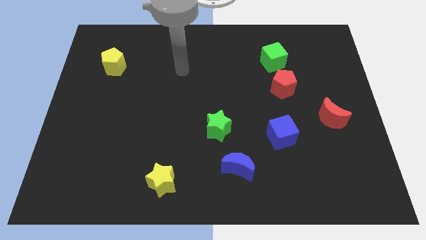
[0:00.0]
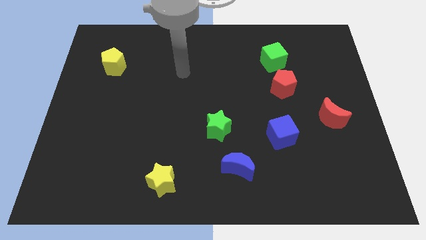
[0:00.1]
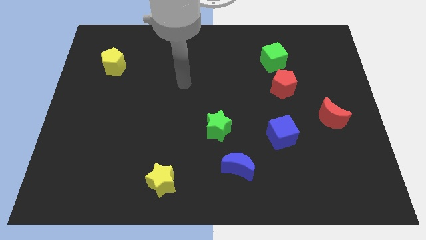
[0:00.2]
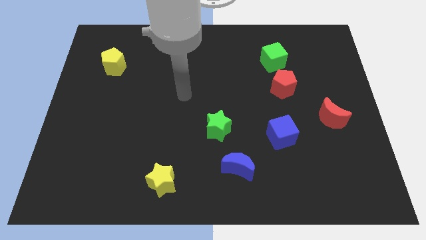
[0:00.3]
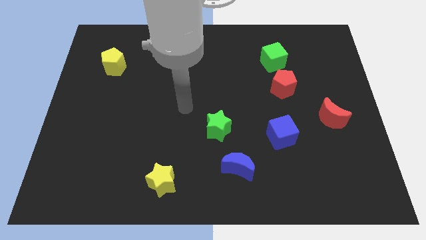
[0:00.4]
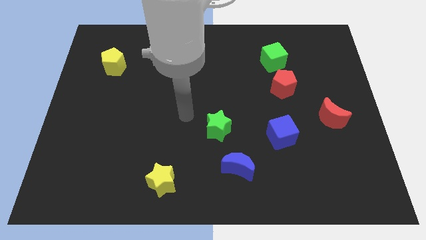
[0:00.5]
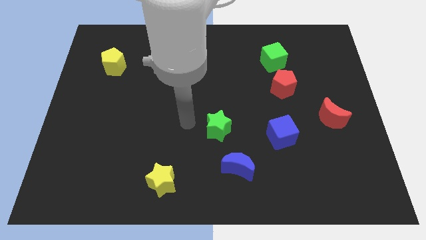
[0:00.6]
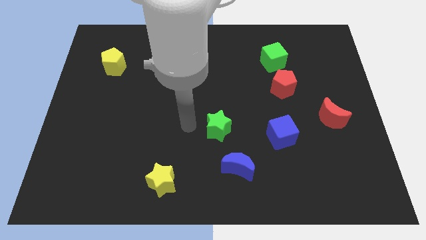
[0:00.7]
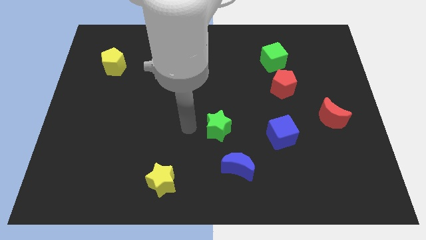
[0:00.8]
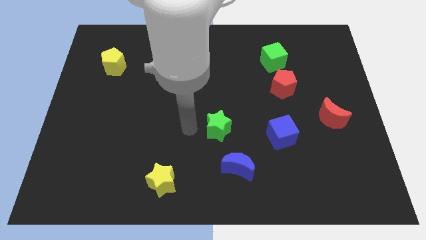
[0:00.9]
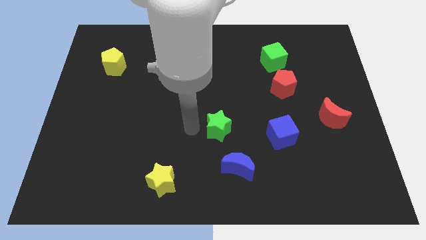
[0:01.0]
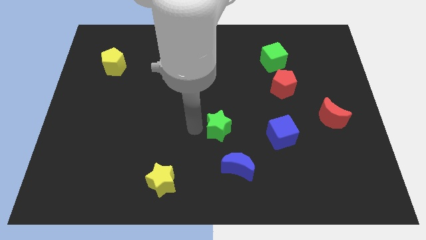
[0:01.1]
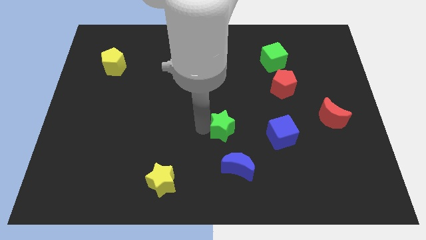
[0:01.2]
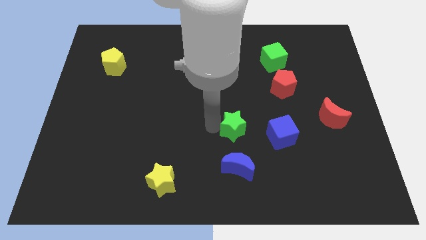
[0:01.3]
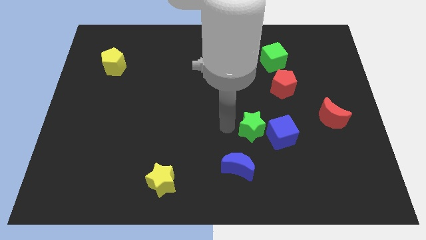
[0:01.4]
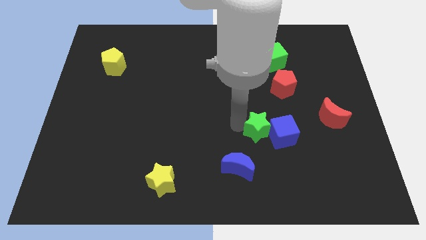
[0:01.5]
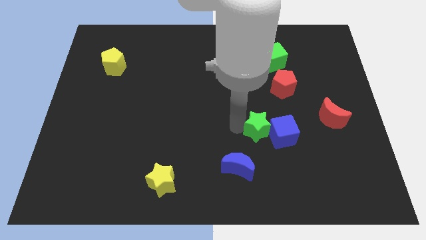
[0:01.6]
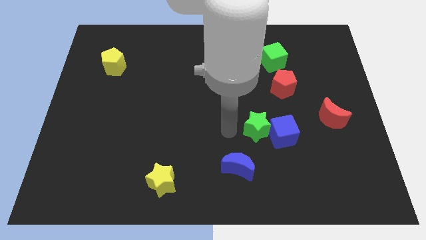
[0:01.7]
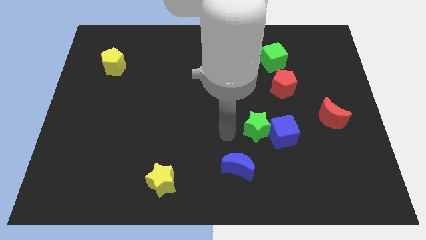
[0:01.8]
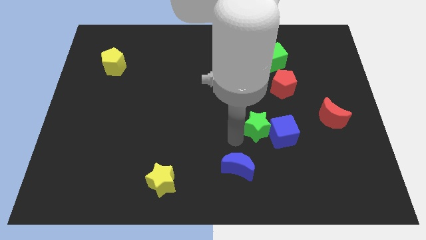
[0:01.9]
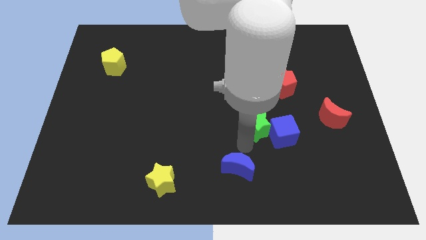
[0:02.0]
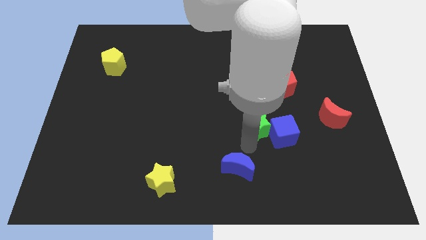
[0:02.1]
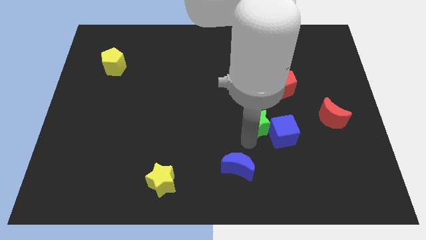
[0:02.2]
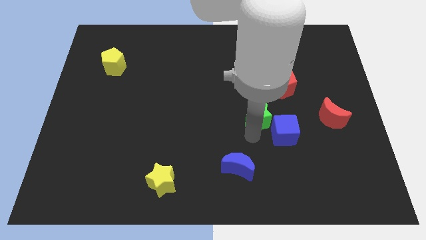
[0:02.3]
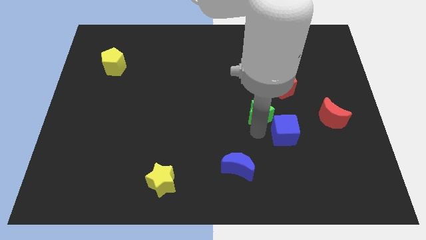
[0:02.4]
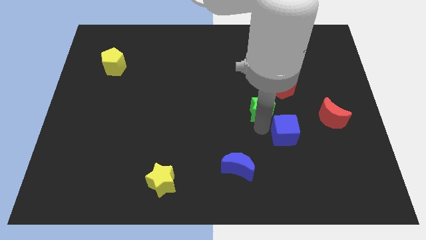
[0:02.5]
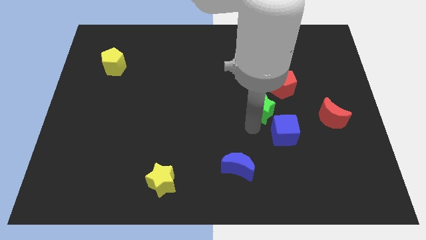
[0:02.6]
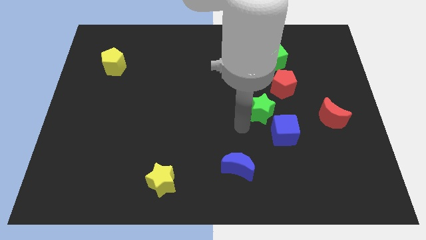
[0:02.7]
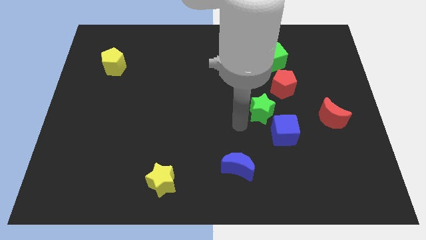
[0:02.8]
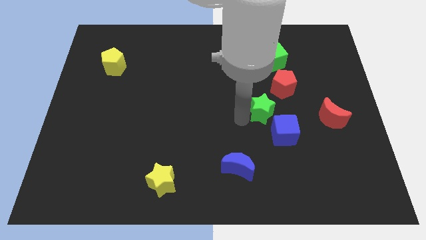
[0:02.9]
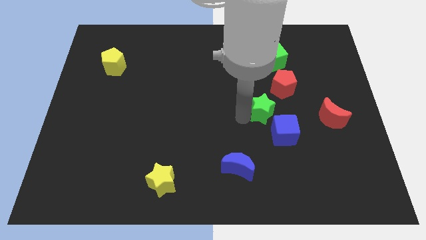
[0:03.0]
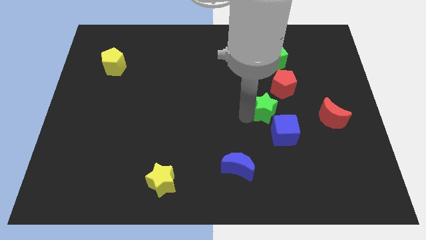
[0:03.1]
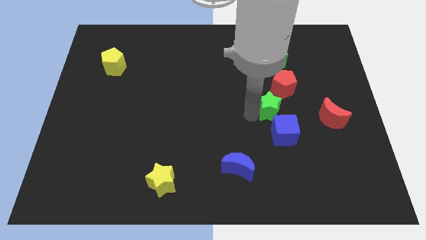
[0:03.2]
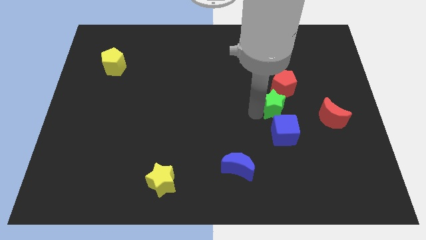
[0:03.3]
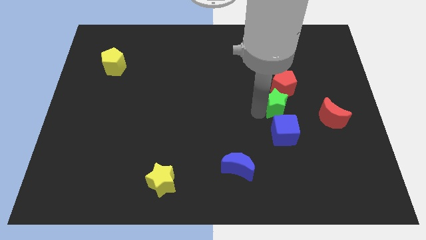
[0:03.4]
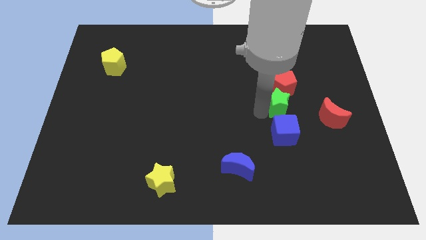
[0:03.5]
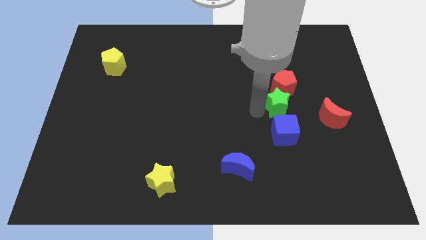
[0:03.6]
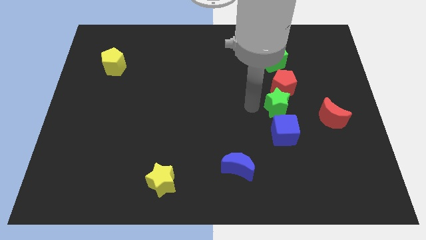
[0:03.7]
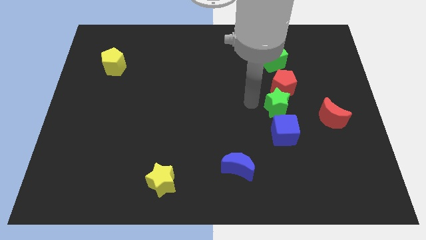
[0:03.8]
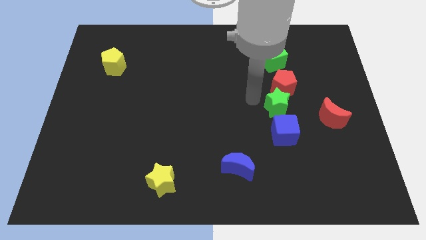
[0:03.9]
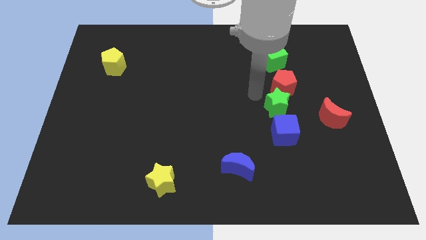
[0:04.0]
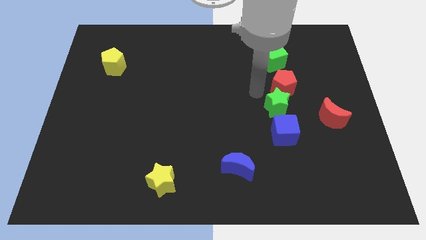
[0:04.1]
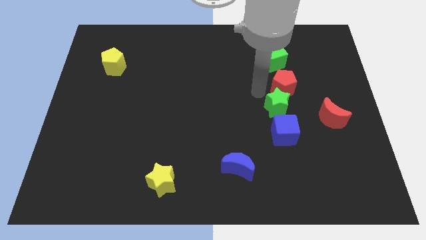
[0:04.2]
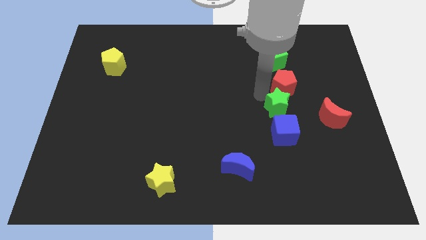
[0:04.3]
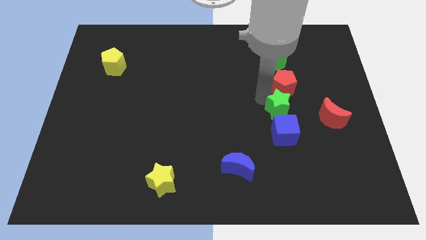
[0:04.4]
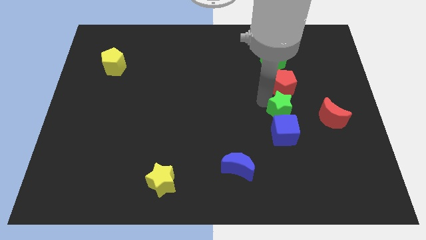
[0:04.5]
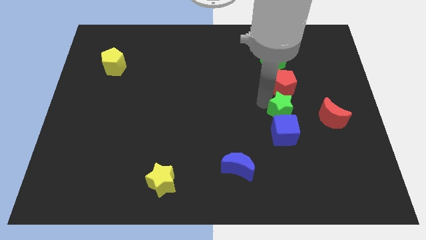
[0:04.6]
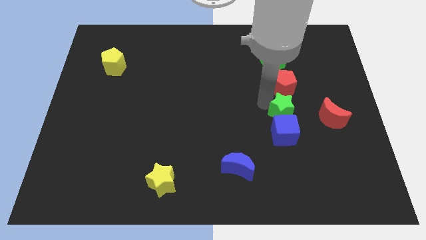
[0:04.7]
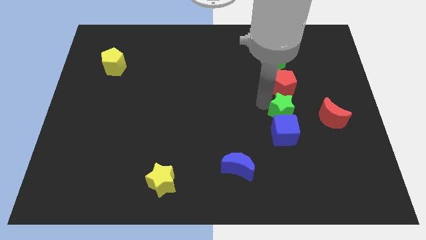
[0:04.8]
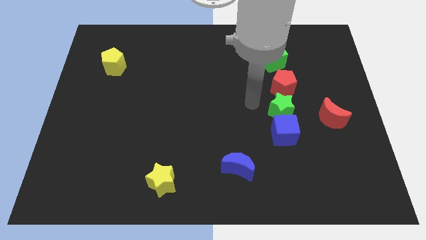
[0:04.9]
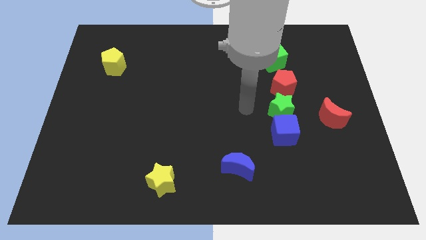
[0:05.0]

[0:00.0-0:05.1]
put the green star in between the blue cube and red pentagon

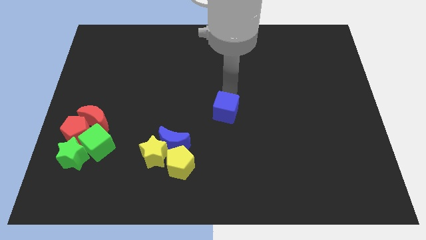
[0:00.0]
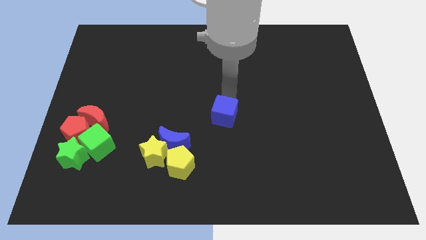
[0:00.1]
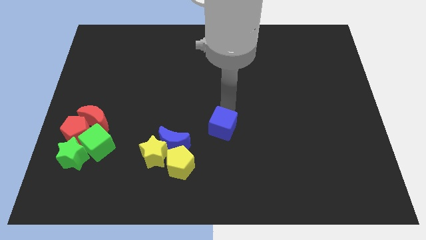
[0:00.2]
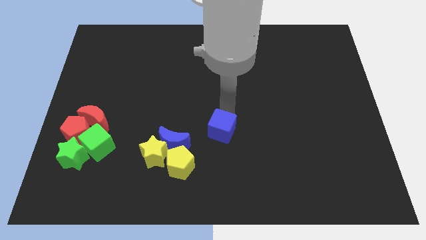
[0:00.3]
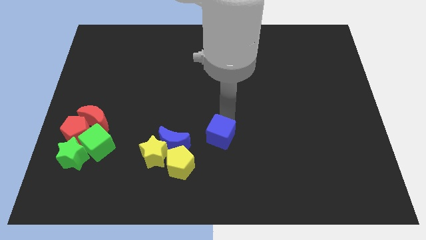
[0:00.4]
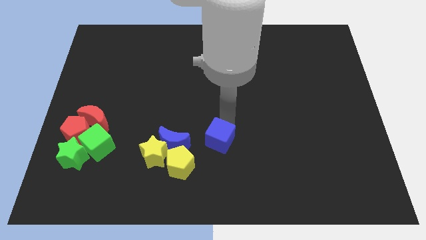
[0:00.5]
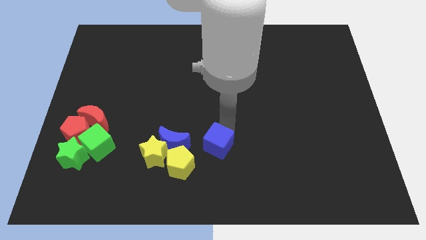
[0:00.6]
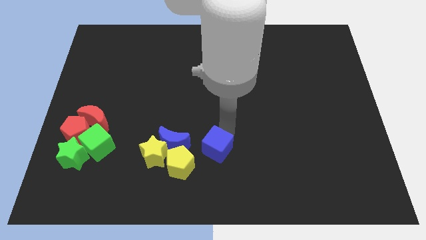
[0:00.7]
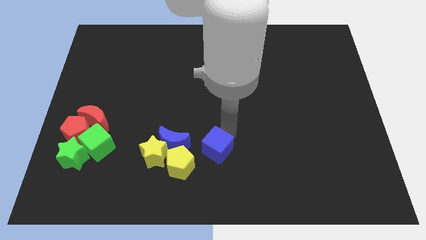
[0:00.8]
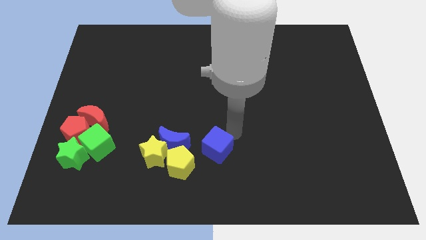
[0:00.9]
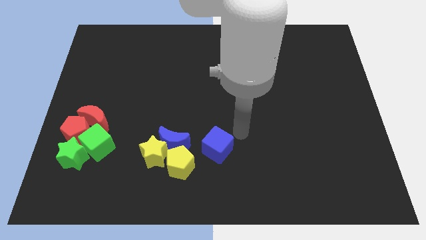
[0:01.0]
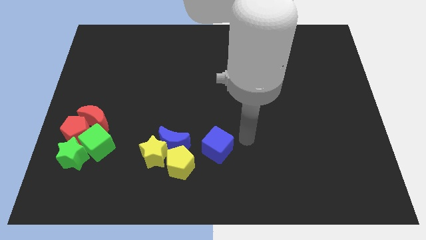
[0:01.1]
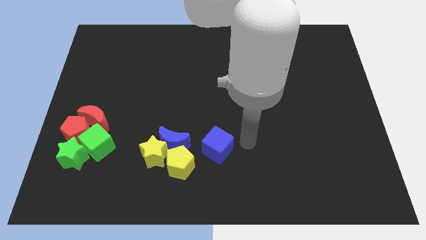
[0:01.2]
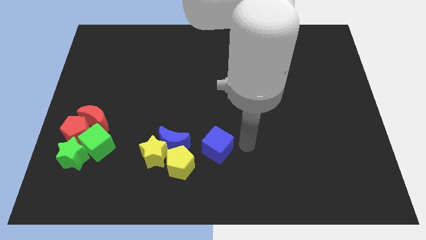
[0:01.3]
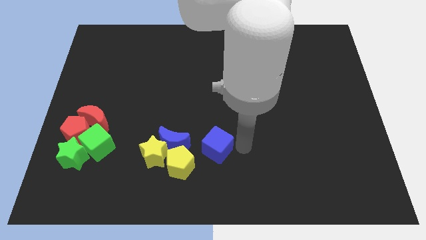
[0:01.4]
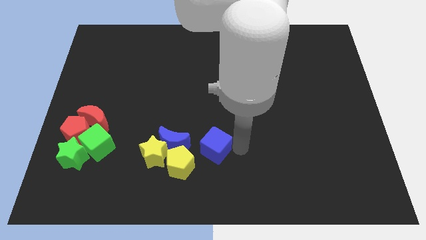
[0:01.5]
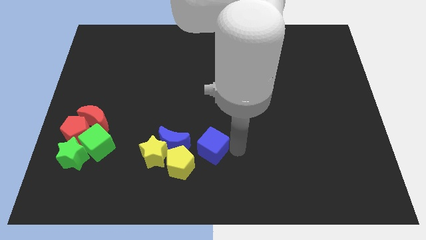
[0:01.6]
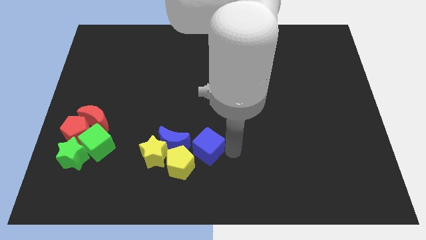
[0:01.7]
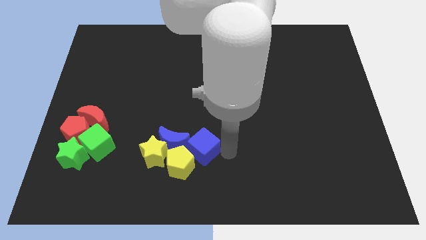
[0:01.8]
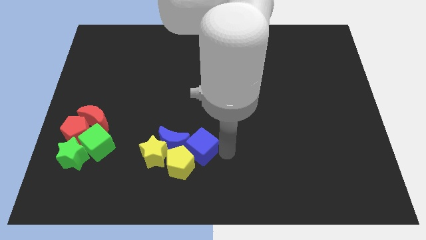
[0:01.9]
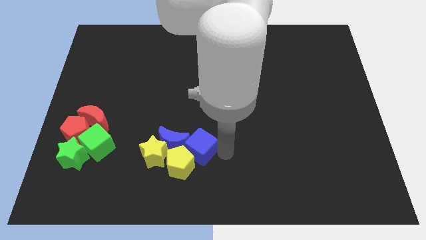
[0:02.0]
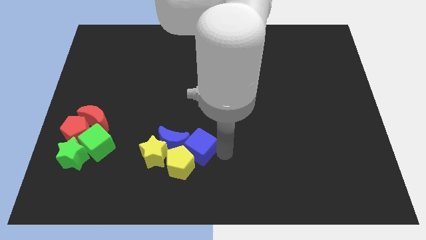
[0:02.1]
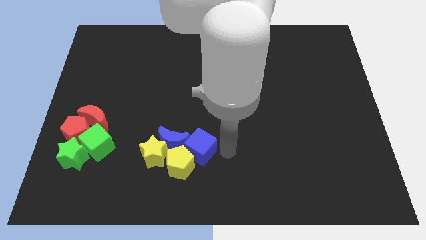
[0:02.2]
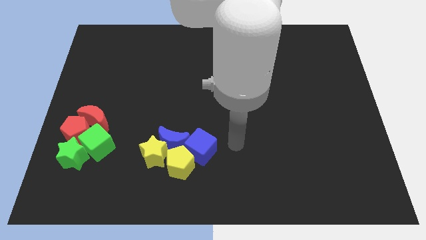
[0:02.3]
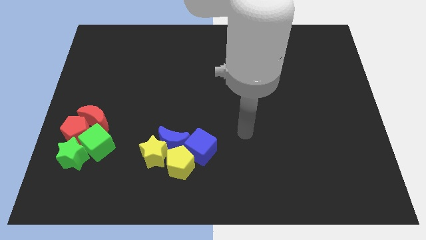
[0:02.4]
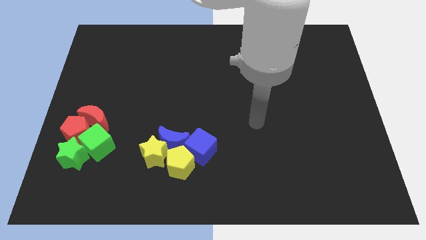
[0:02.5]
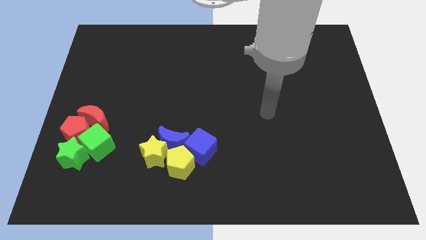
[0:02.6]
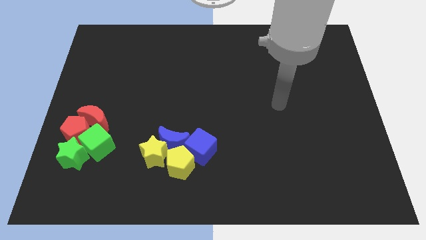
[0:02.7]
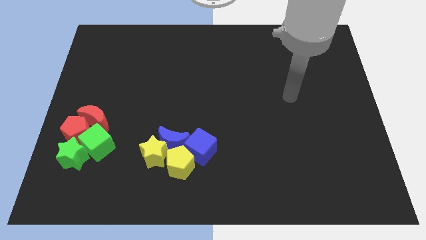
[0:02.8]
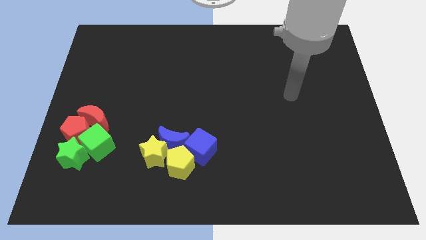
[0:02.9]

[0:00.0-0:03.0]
move your arm to the right center of the board

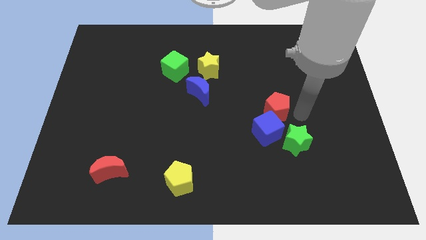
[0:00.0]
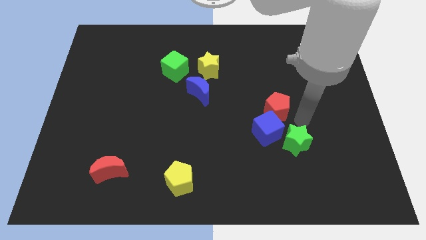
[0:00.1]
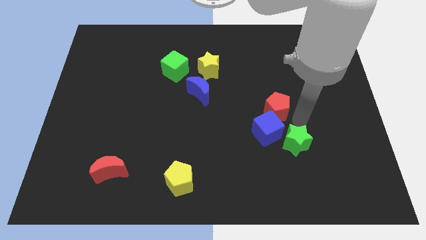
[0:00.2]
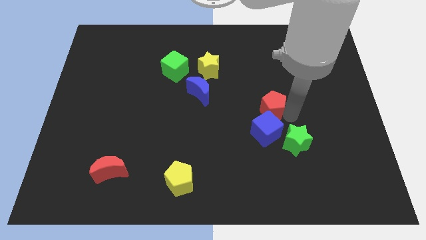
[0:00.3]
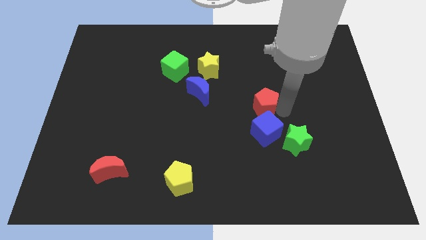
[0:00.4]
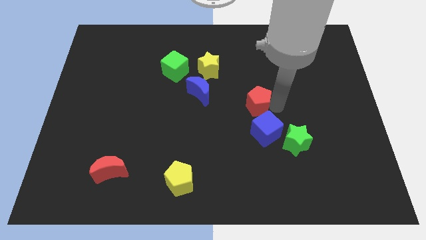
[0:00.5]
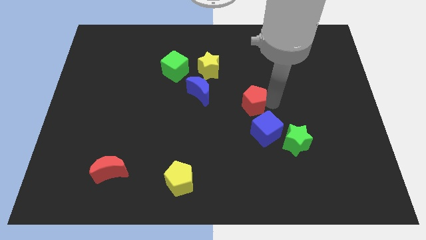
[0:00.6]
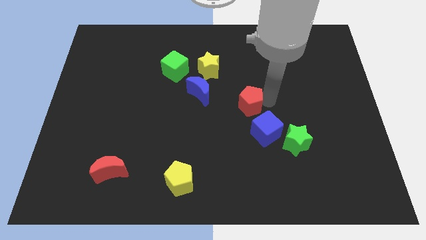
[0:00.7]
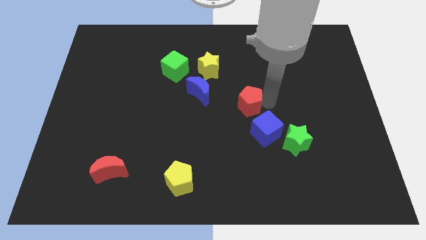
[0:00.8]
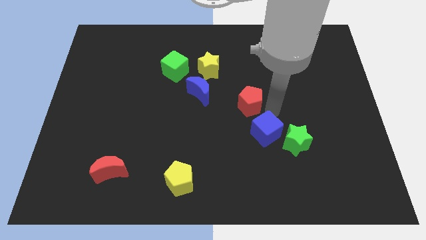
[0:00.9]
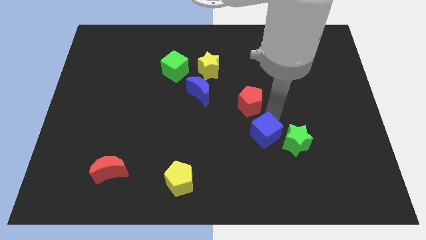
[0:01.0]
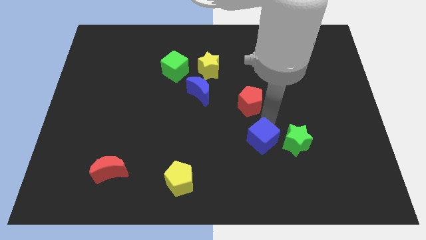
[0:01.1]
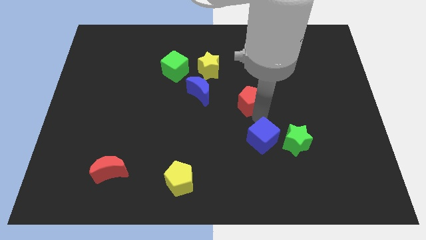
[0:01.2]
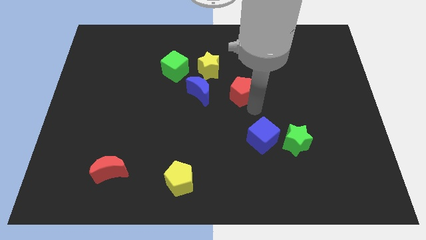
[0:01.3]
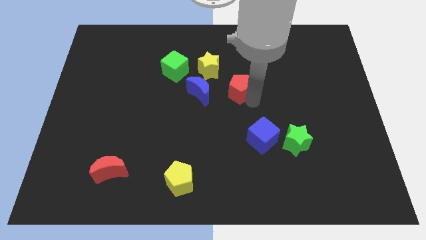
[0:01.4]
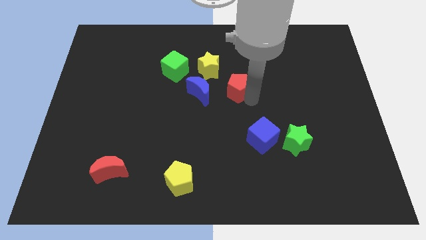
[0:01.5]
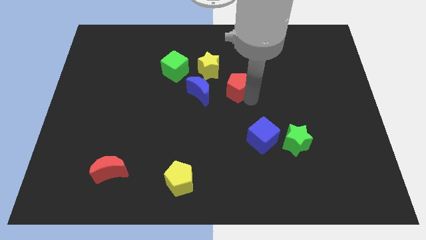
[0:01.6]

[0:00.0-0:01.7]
separate the red pentagon from the blue cube
